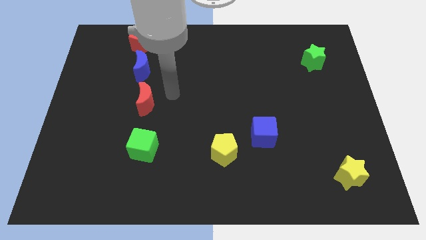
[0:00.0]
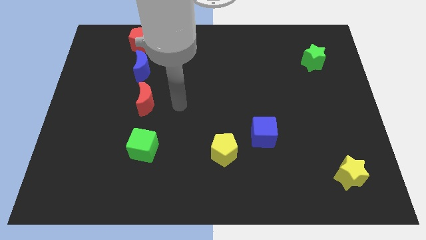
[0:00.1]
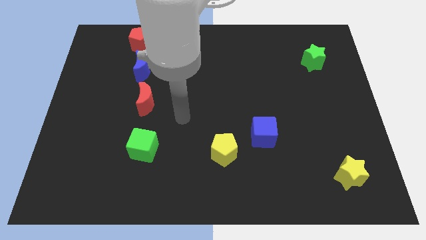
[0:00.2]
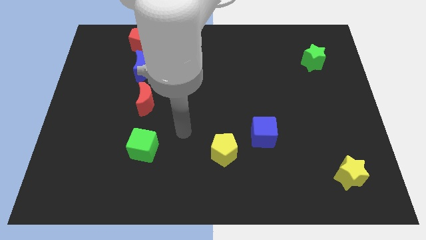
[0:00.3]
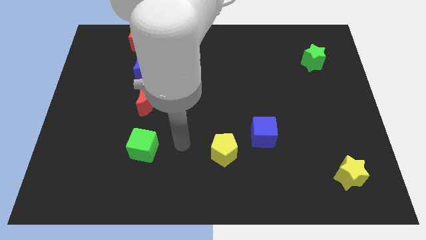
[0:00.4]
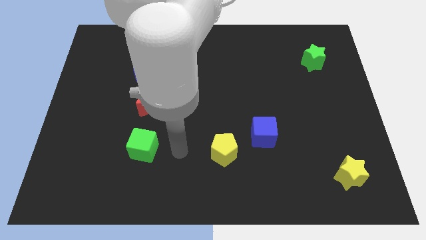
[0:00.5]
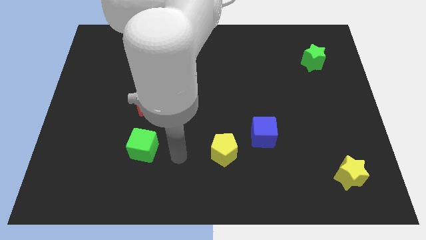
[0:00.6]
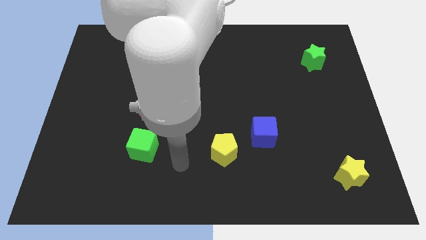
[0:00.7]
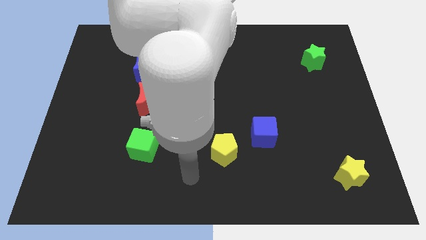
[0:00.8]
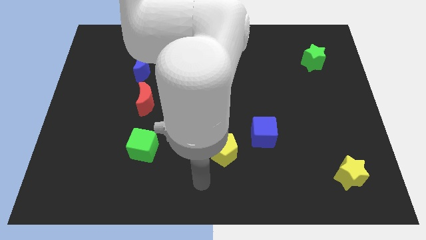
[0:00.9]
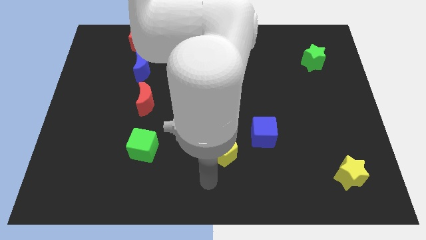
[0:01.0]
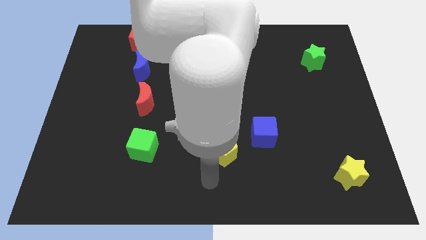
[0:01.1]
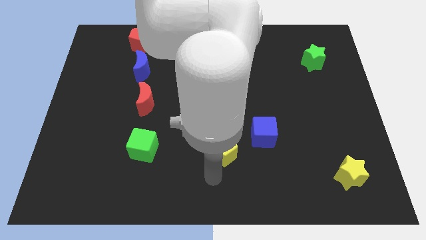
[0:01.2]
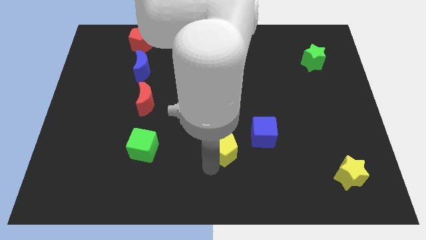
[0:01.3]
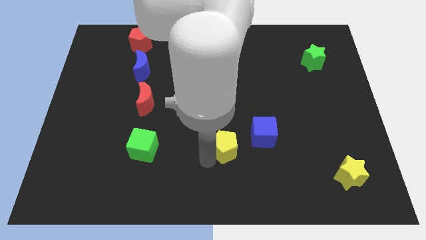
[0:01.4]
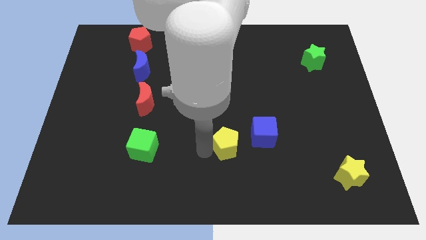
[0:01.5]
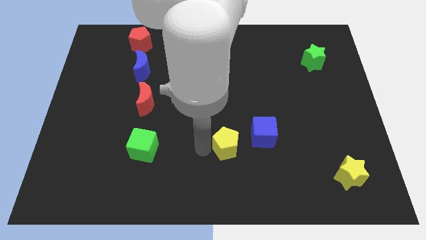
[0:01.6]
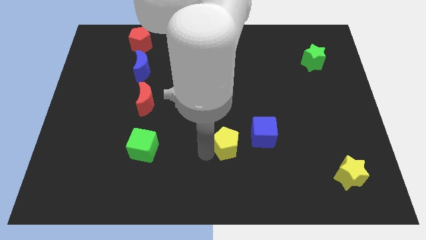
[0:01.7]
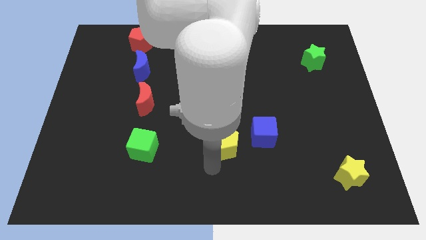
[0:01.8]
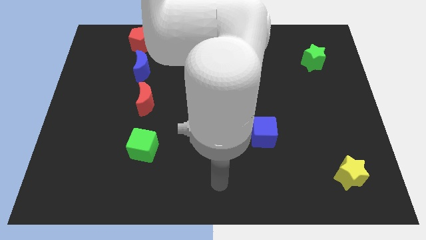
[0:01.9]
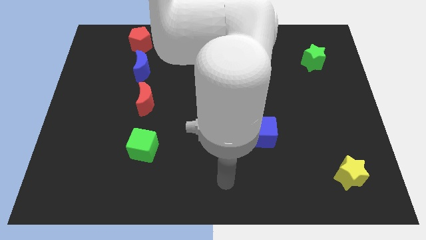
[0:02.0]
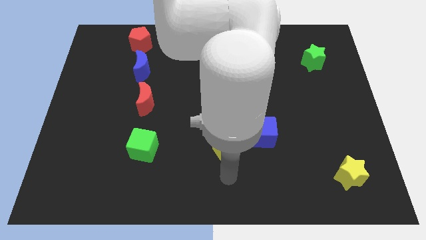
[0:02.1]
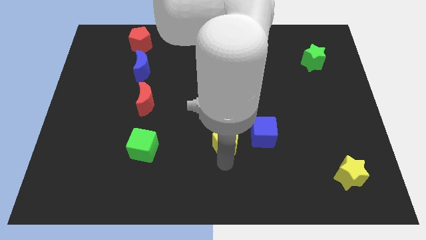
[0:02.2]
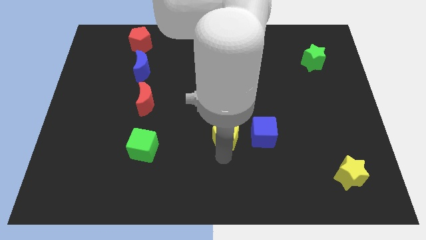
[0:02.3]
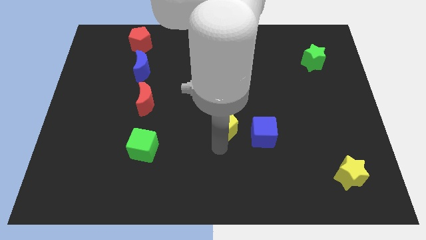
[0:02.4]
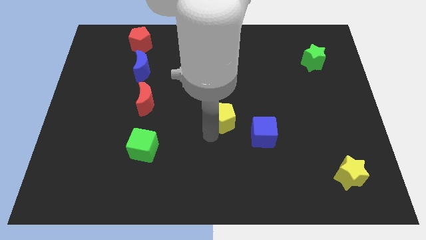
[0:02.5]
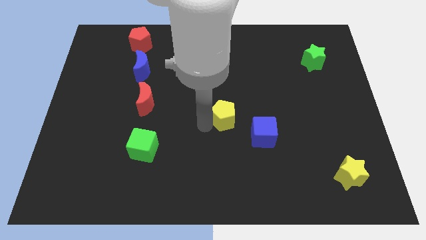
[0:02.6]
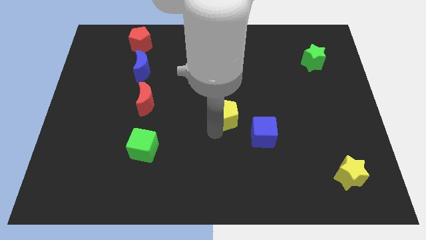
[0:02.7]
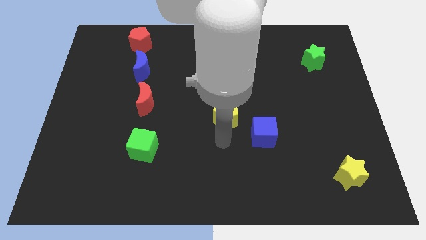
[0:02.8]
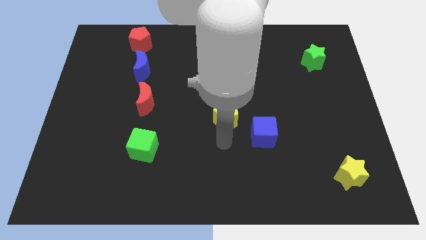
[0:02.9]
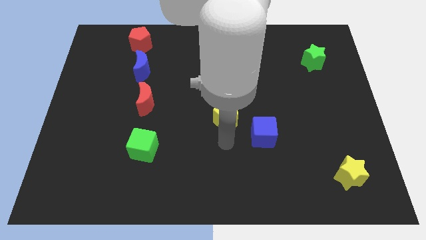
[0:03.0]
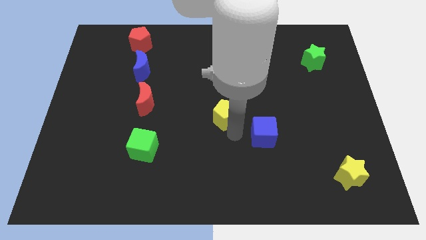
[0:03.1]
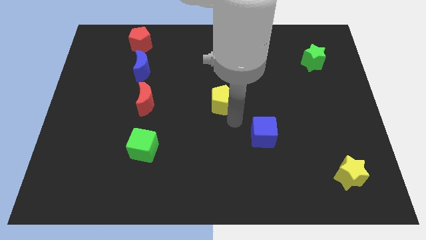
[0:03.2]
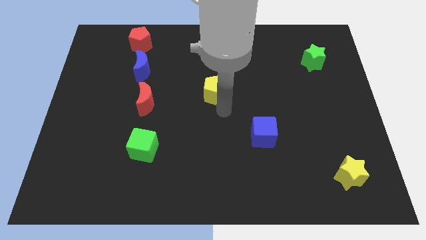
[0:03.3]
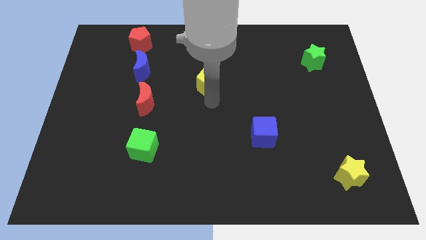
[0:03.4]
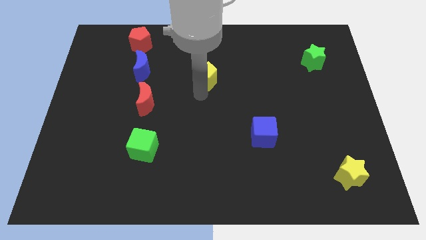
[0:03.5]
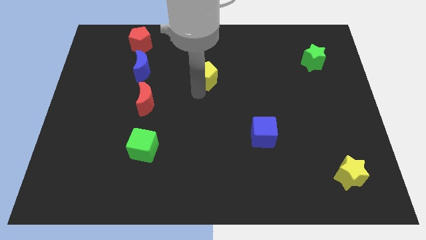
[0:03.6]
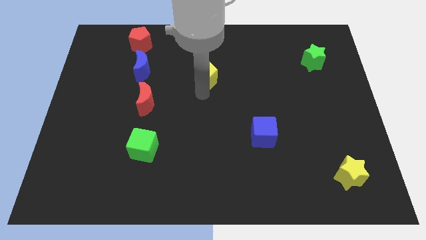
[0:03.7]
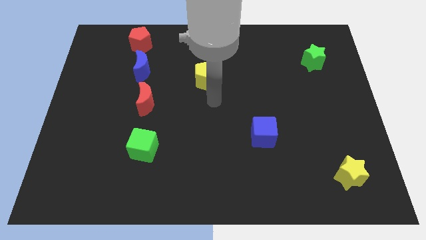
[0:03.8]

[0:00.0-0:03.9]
push the yellow pentagon towards the top of the board

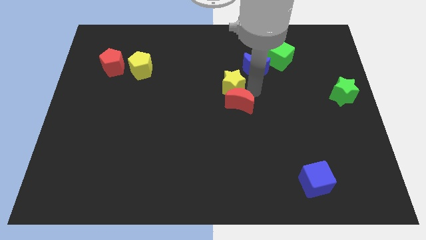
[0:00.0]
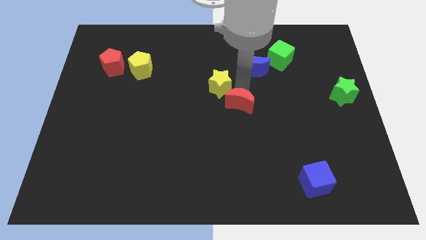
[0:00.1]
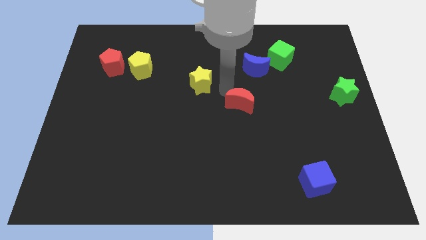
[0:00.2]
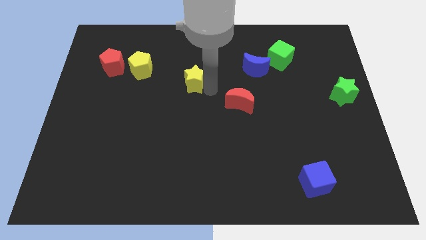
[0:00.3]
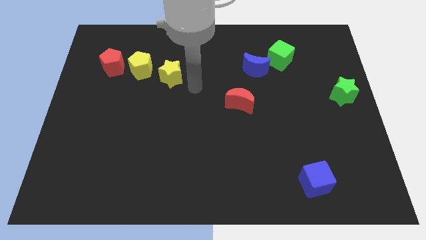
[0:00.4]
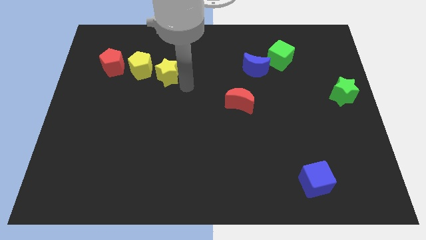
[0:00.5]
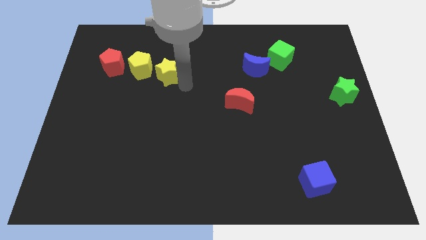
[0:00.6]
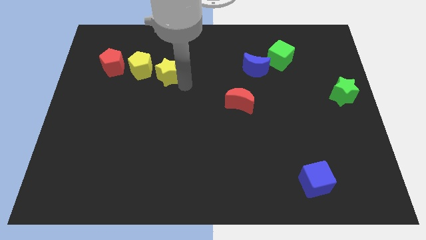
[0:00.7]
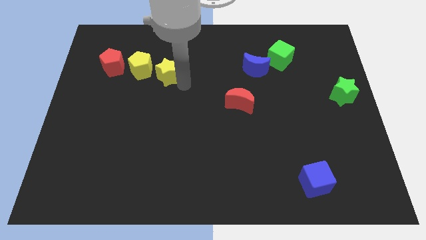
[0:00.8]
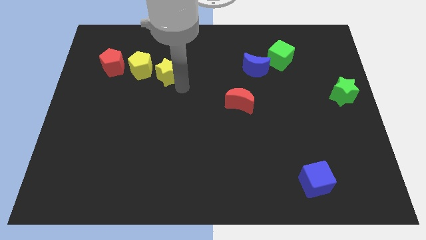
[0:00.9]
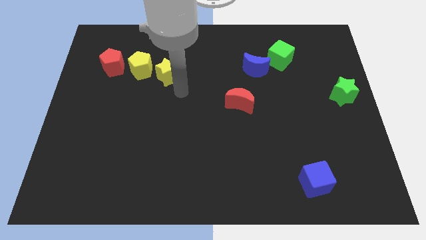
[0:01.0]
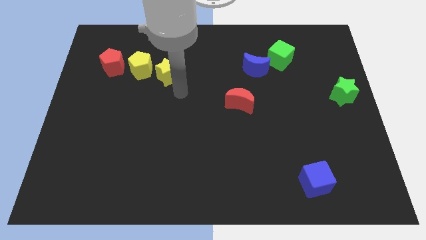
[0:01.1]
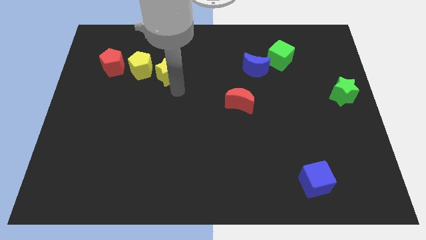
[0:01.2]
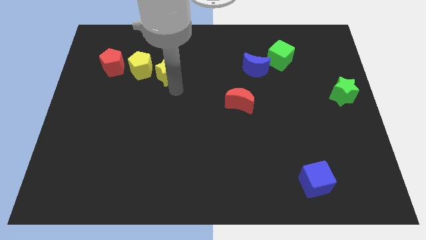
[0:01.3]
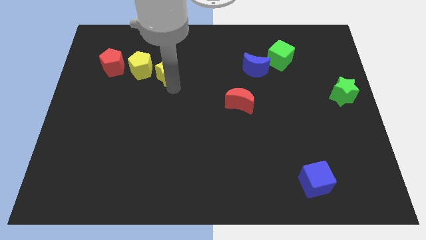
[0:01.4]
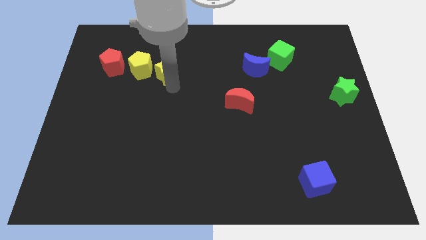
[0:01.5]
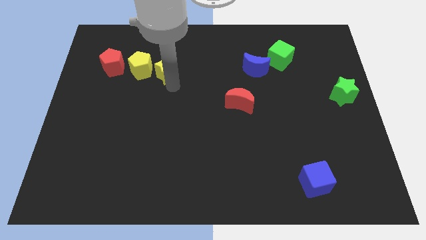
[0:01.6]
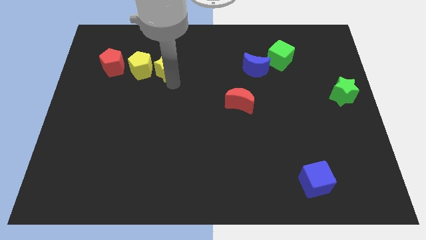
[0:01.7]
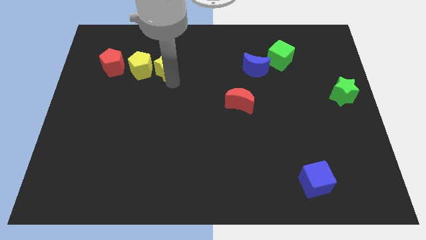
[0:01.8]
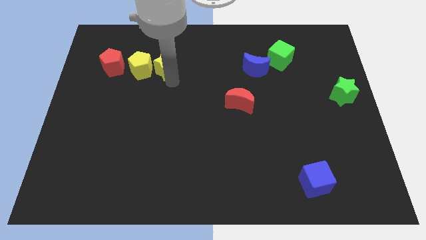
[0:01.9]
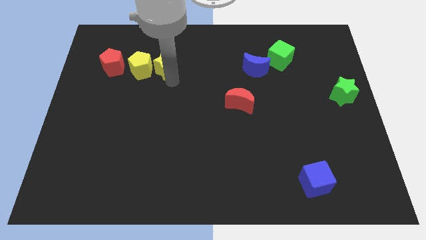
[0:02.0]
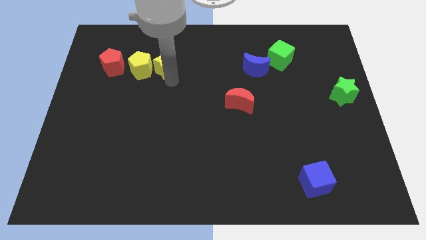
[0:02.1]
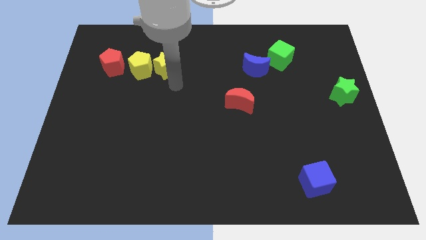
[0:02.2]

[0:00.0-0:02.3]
place the yellow star close to yellow pentagon

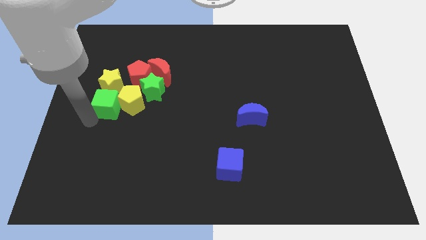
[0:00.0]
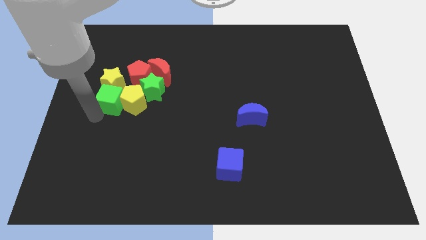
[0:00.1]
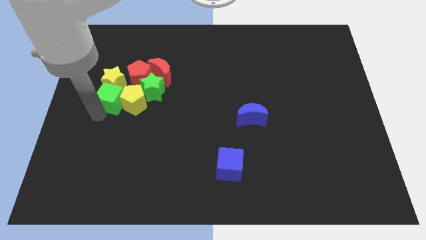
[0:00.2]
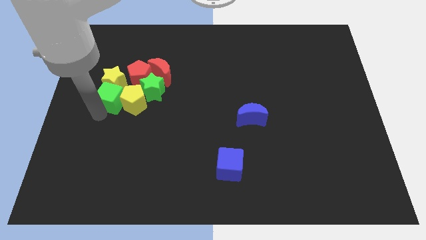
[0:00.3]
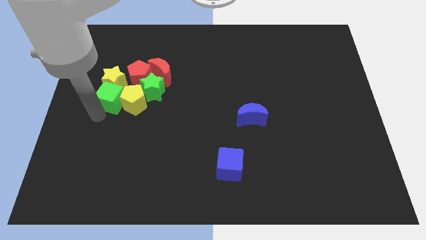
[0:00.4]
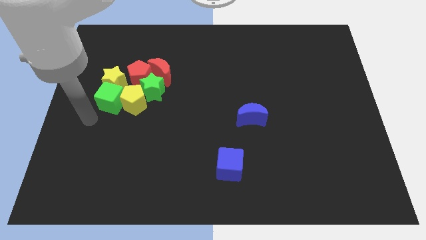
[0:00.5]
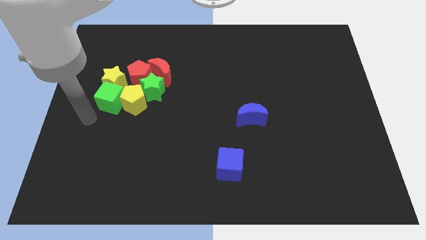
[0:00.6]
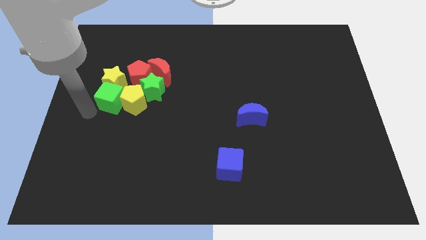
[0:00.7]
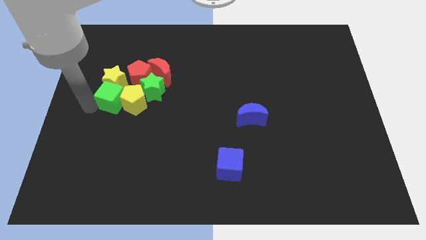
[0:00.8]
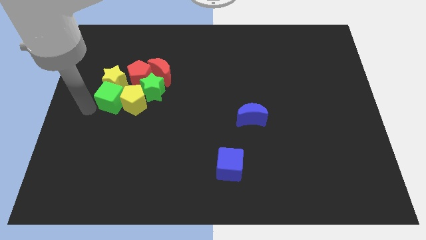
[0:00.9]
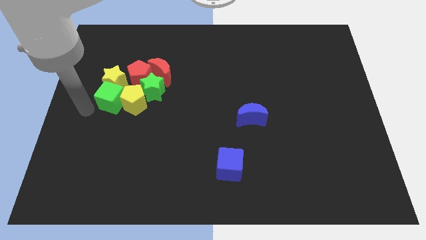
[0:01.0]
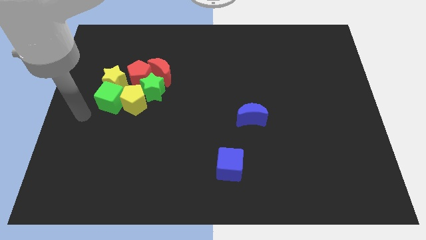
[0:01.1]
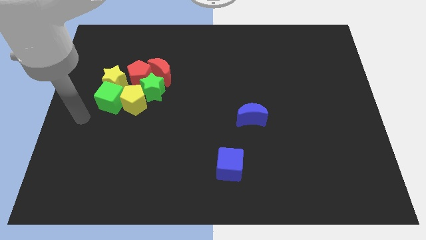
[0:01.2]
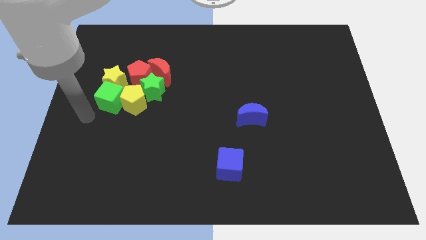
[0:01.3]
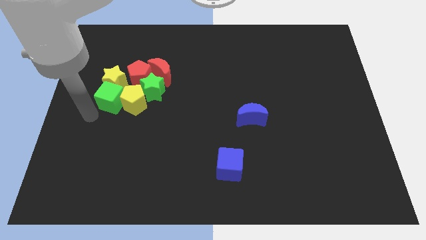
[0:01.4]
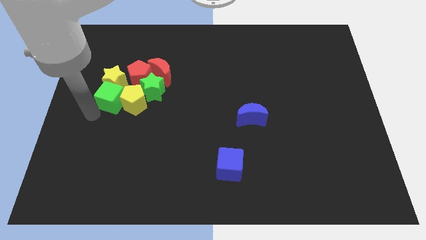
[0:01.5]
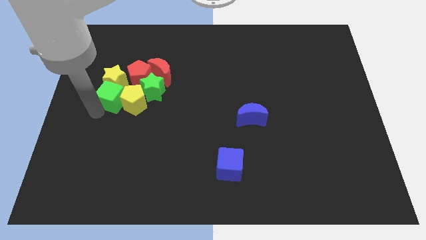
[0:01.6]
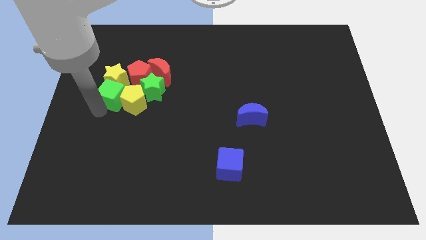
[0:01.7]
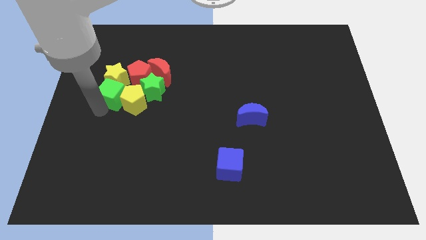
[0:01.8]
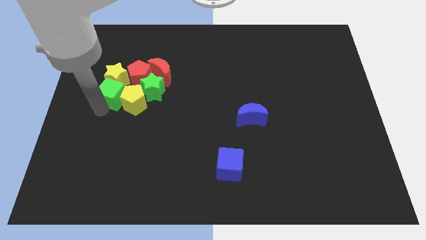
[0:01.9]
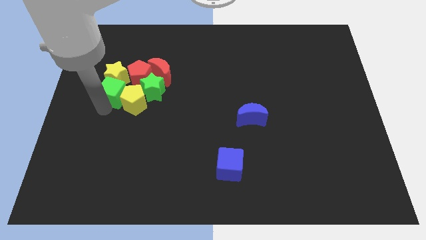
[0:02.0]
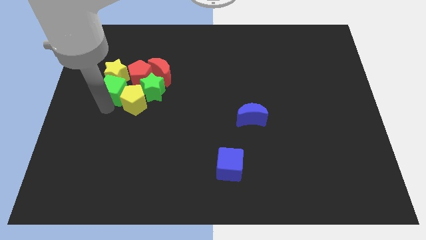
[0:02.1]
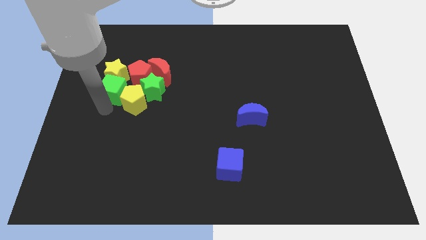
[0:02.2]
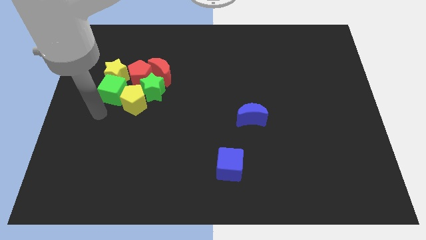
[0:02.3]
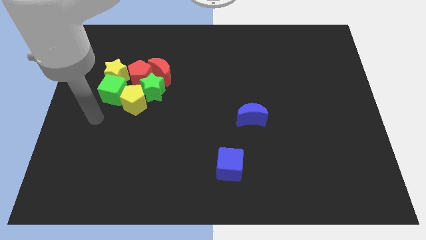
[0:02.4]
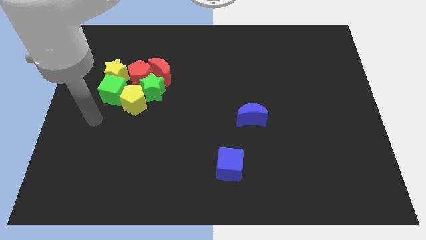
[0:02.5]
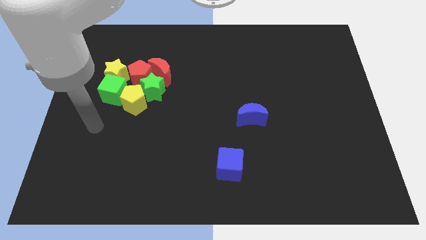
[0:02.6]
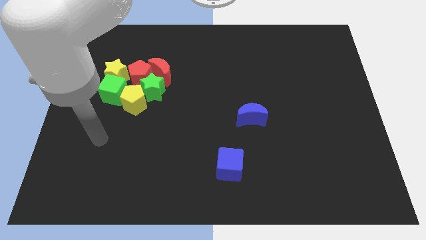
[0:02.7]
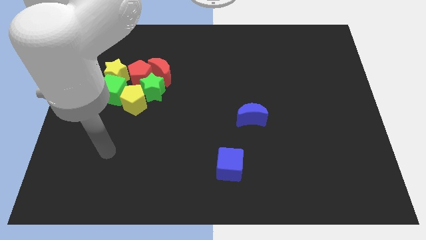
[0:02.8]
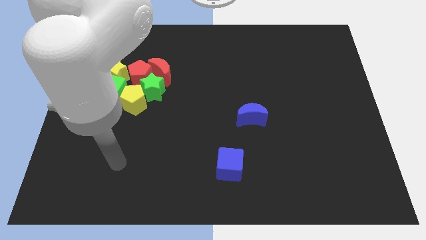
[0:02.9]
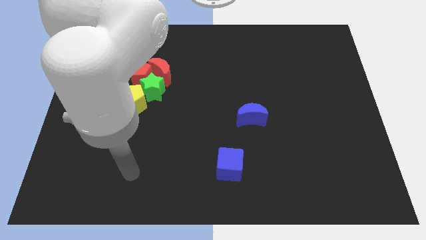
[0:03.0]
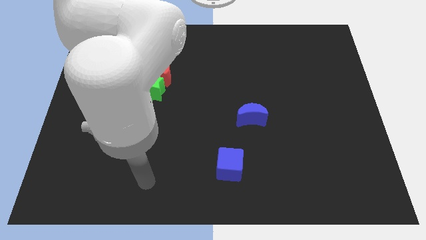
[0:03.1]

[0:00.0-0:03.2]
move the arm away from the green cube
